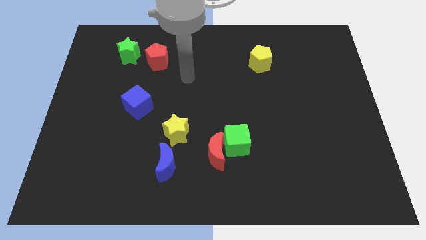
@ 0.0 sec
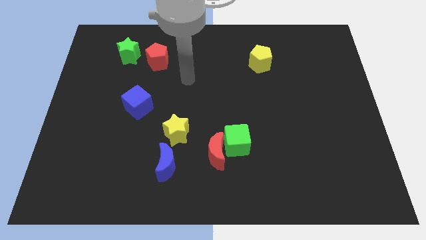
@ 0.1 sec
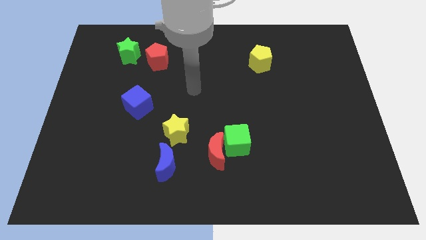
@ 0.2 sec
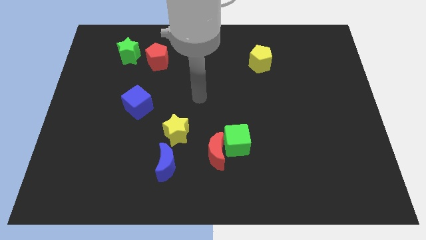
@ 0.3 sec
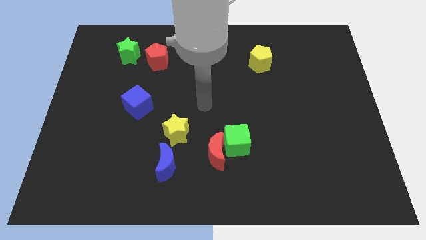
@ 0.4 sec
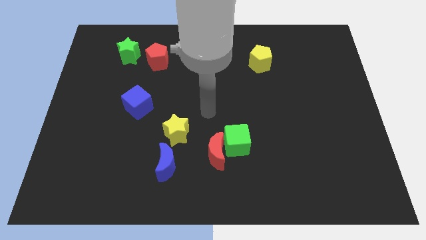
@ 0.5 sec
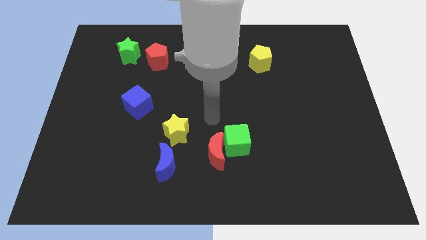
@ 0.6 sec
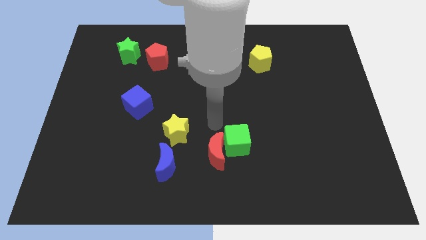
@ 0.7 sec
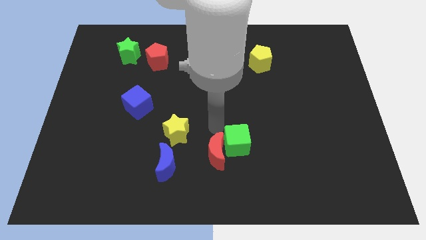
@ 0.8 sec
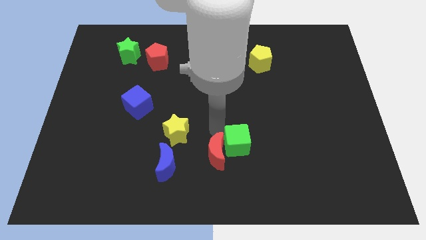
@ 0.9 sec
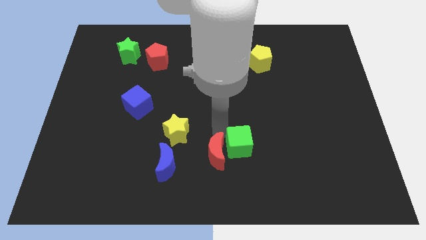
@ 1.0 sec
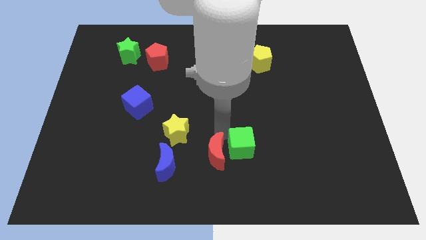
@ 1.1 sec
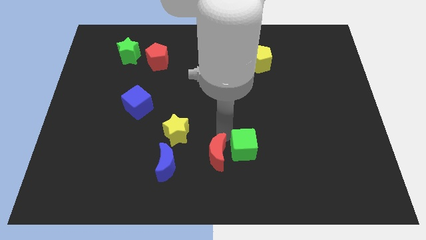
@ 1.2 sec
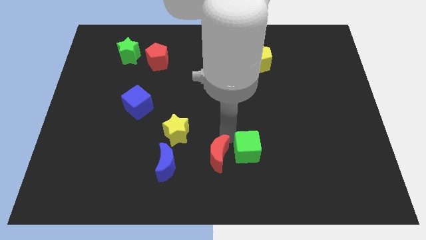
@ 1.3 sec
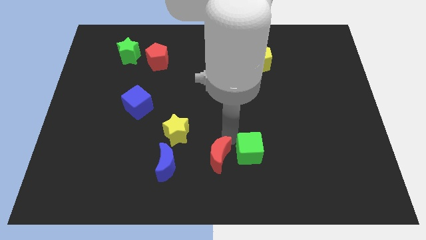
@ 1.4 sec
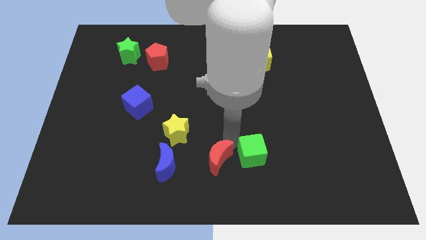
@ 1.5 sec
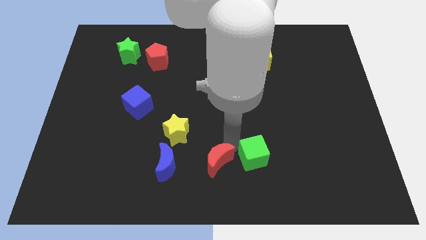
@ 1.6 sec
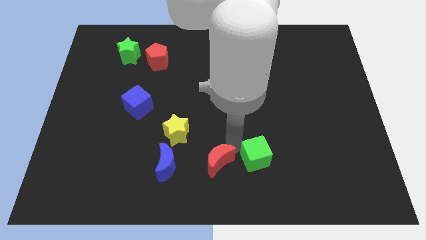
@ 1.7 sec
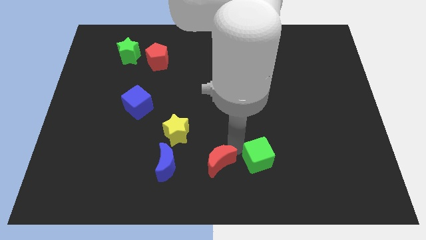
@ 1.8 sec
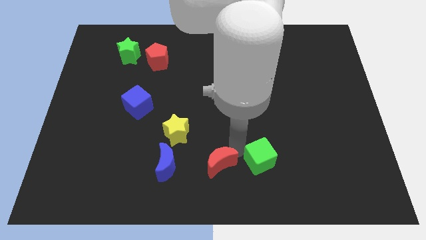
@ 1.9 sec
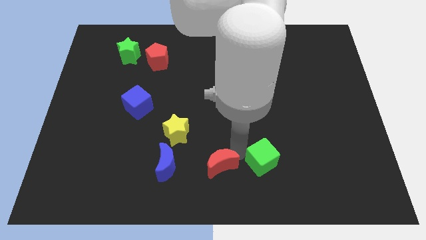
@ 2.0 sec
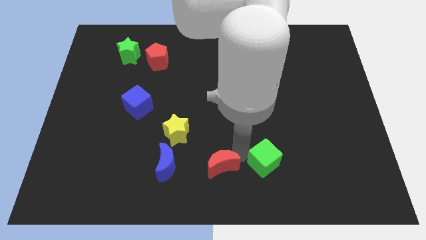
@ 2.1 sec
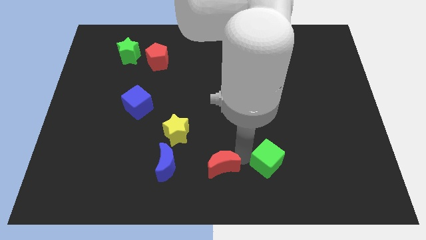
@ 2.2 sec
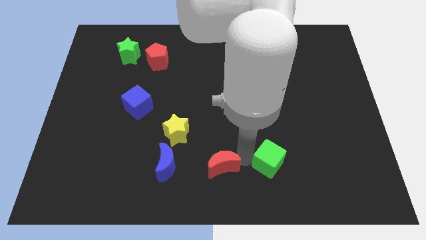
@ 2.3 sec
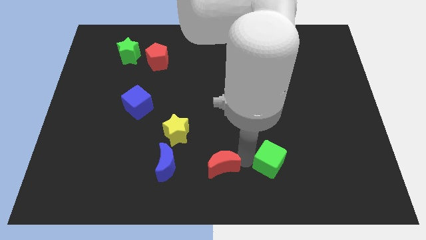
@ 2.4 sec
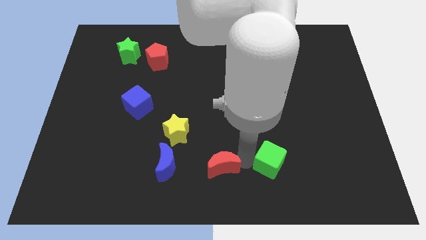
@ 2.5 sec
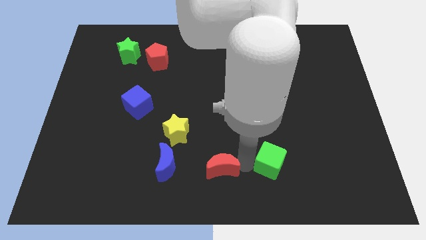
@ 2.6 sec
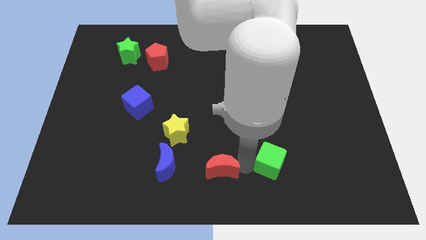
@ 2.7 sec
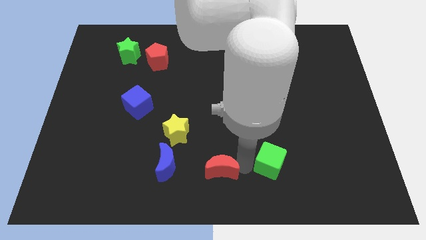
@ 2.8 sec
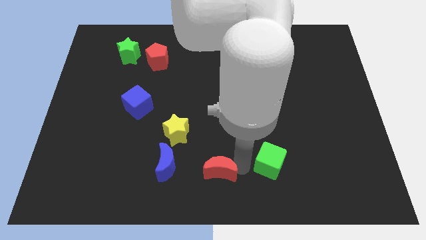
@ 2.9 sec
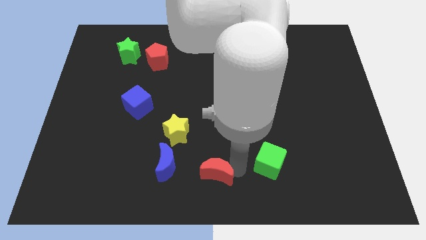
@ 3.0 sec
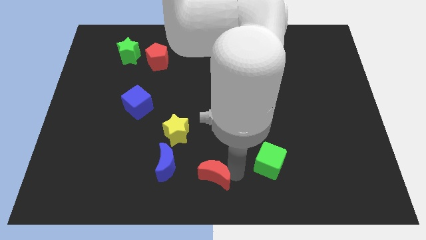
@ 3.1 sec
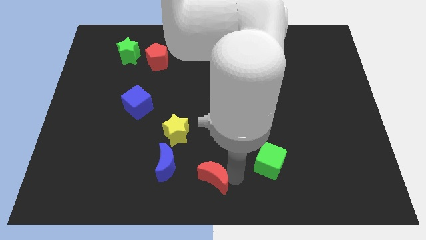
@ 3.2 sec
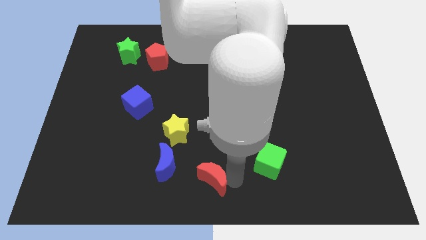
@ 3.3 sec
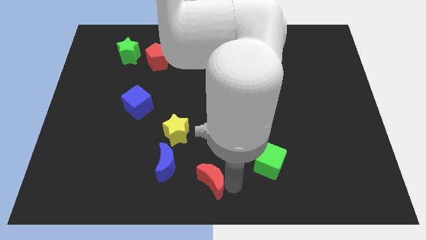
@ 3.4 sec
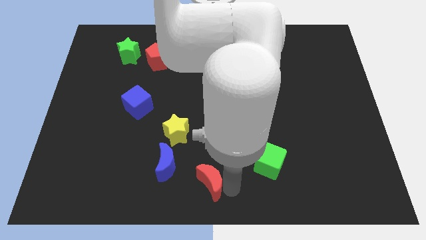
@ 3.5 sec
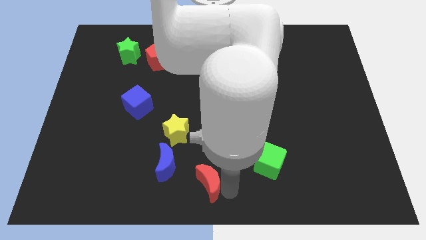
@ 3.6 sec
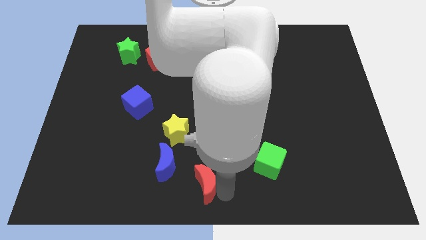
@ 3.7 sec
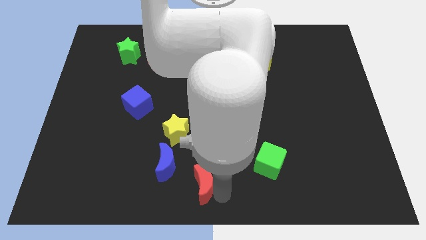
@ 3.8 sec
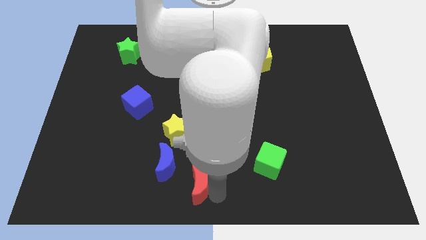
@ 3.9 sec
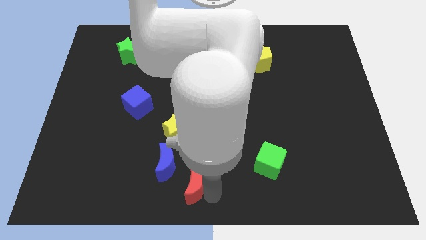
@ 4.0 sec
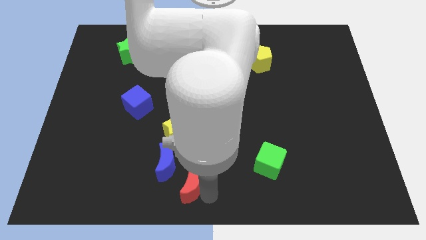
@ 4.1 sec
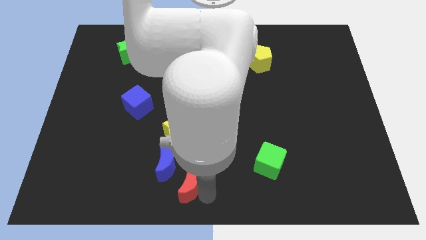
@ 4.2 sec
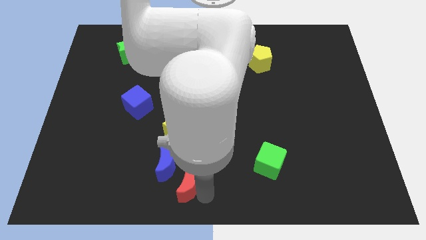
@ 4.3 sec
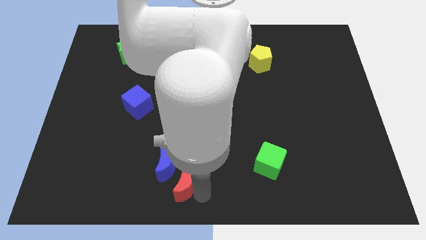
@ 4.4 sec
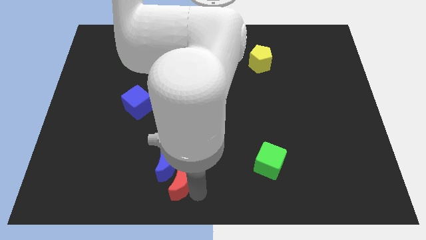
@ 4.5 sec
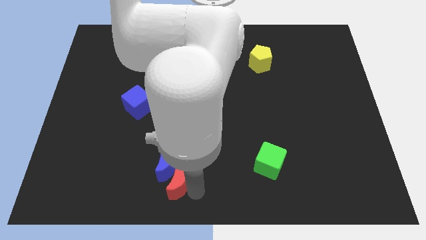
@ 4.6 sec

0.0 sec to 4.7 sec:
put the red moon next to the blue moon

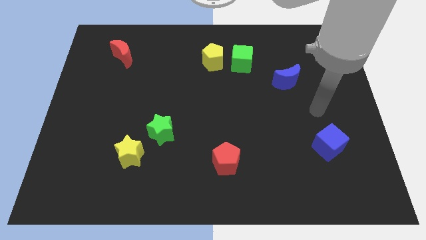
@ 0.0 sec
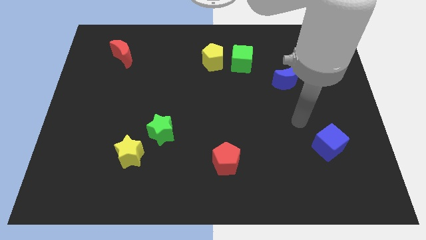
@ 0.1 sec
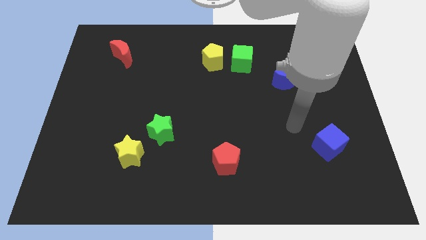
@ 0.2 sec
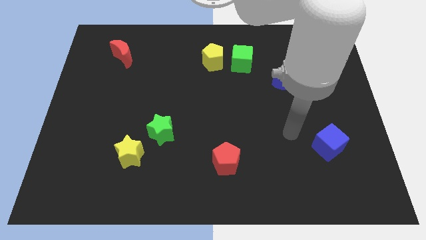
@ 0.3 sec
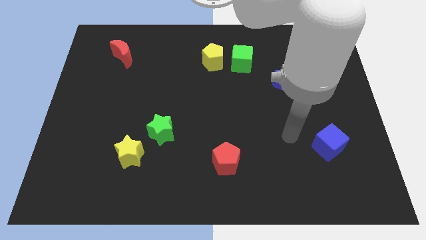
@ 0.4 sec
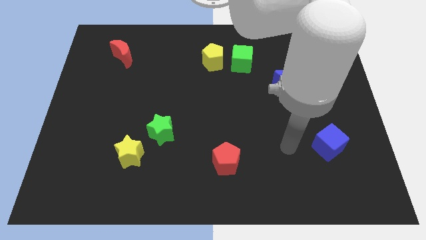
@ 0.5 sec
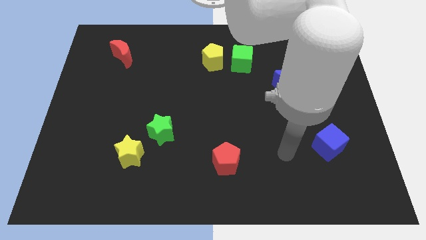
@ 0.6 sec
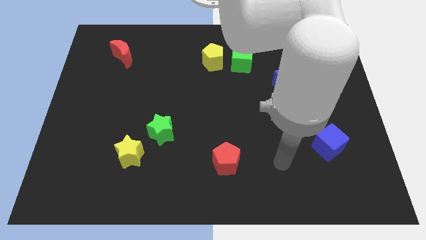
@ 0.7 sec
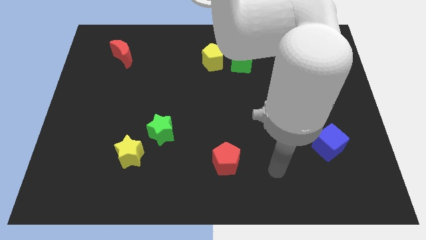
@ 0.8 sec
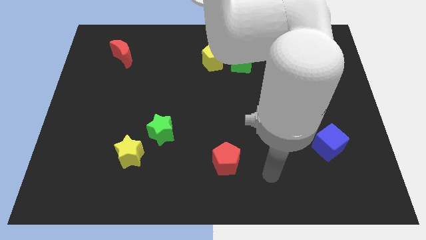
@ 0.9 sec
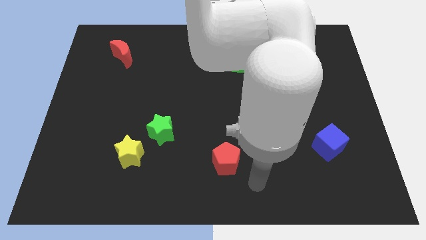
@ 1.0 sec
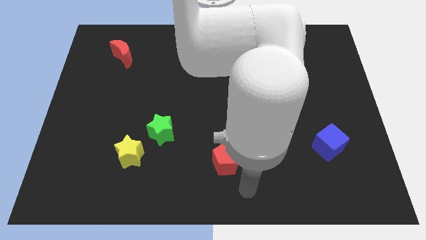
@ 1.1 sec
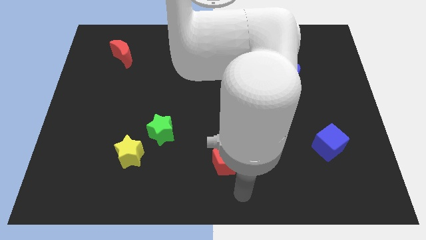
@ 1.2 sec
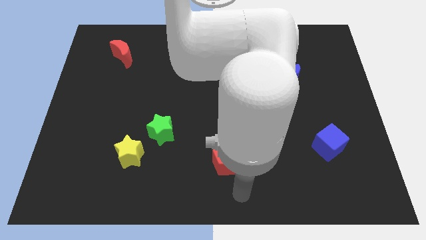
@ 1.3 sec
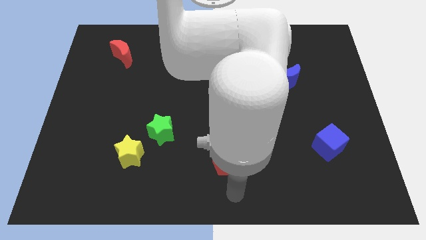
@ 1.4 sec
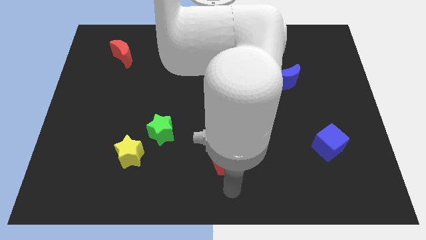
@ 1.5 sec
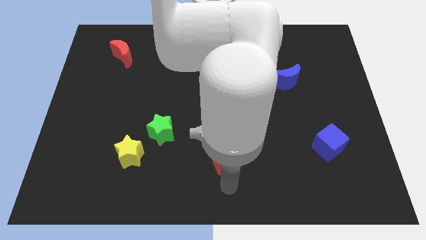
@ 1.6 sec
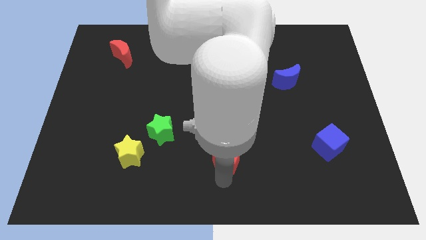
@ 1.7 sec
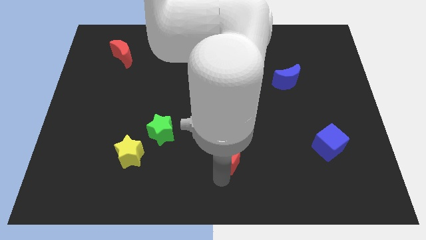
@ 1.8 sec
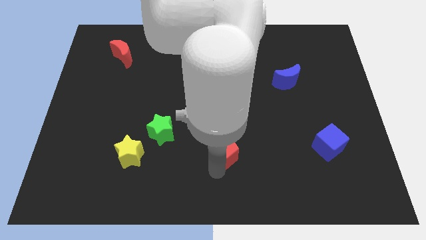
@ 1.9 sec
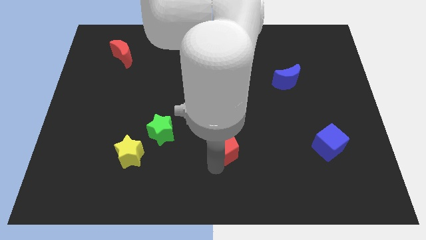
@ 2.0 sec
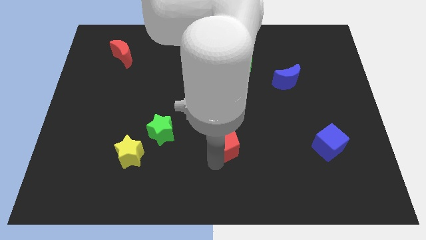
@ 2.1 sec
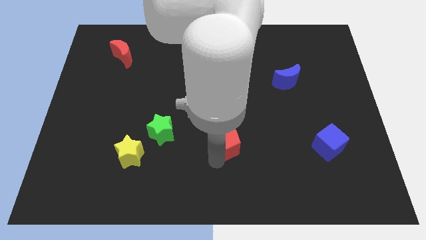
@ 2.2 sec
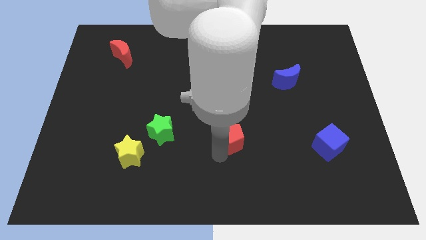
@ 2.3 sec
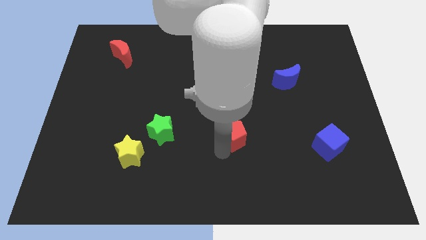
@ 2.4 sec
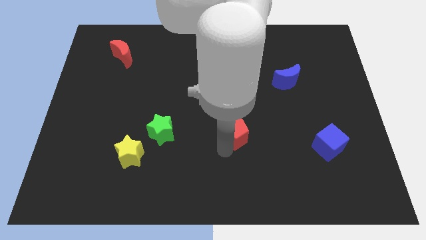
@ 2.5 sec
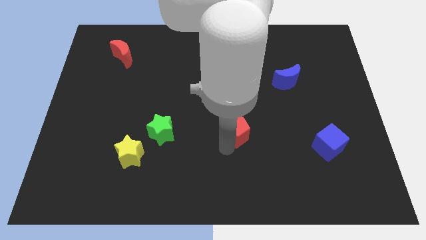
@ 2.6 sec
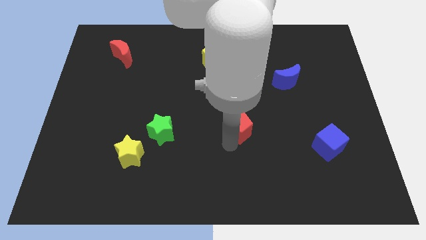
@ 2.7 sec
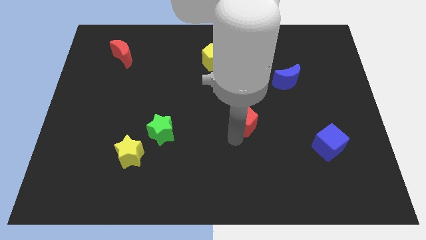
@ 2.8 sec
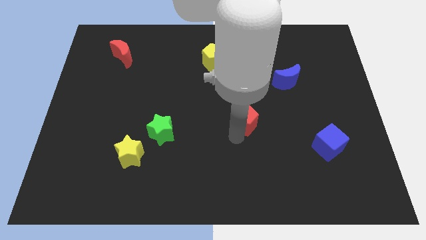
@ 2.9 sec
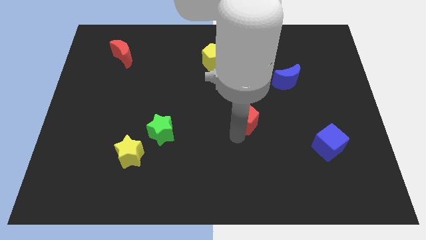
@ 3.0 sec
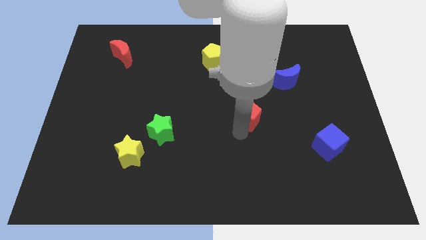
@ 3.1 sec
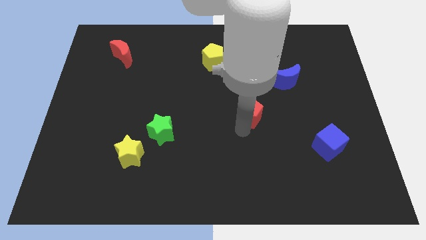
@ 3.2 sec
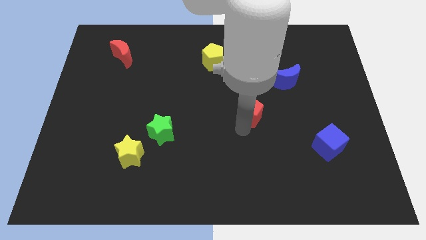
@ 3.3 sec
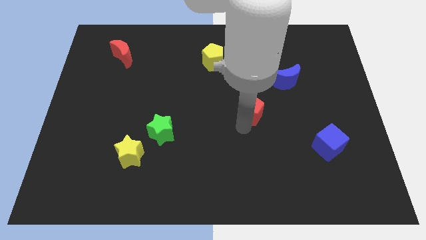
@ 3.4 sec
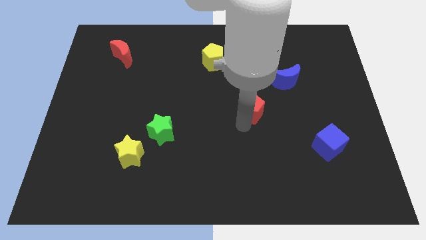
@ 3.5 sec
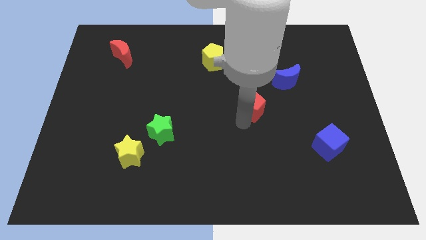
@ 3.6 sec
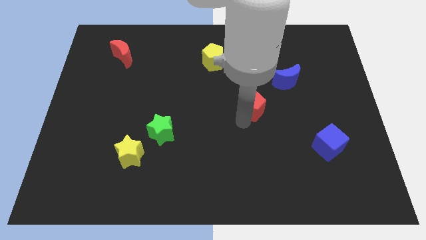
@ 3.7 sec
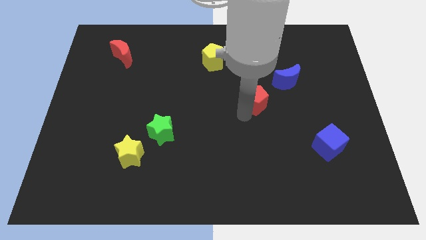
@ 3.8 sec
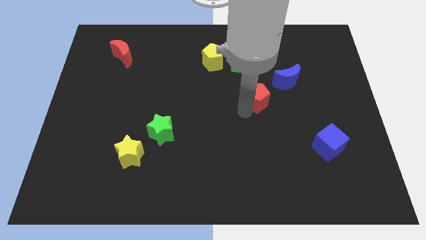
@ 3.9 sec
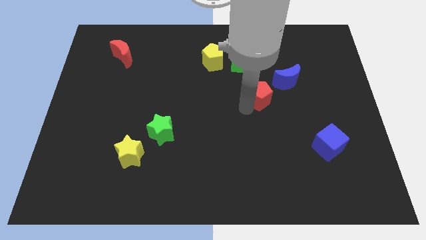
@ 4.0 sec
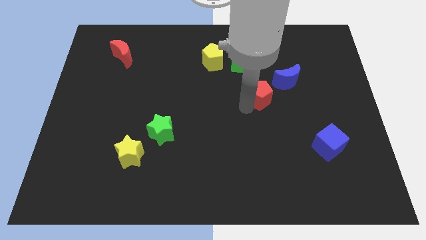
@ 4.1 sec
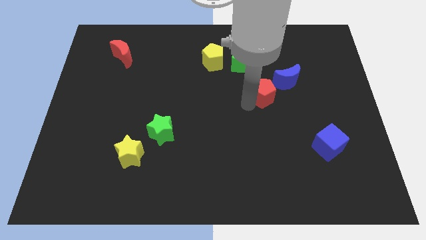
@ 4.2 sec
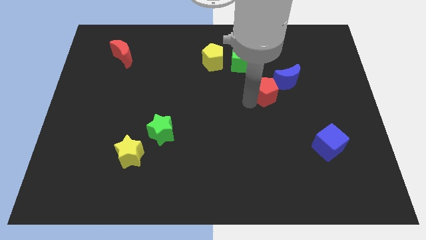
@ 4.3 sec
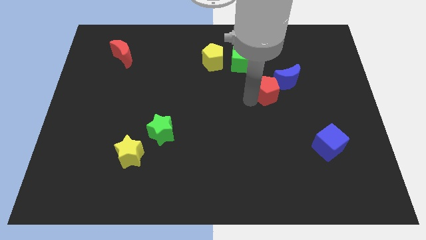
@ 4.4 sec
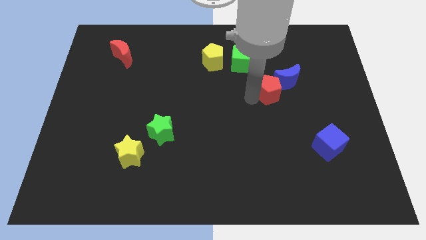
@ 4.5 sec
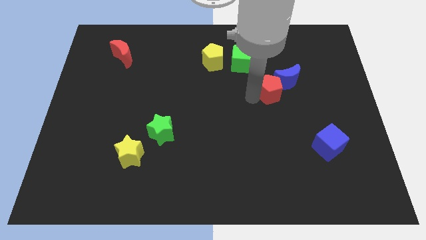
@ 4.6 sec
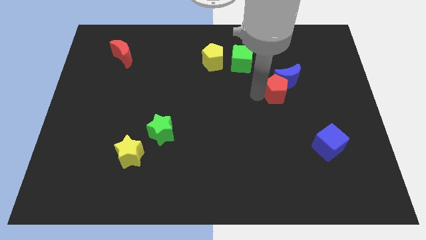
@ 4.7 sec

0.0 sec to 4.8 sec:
push the red pentagon towards the blue moon
